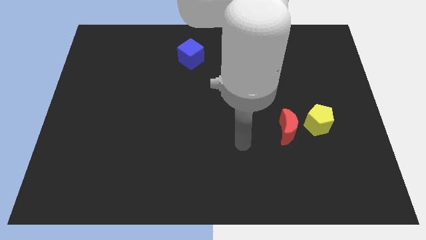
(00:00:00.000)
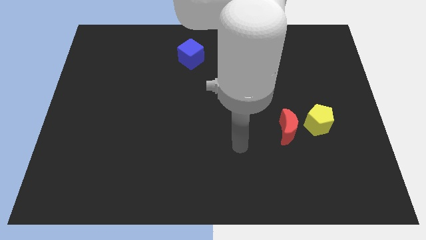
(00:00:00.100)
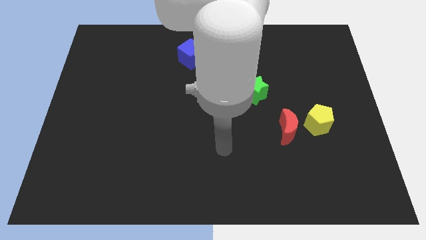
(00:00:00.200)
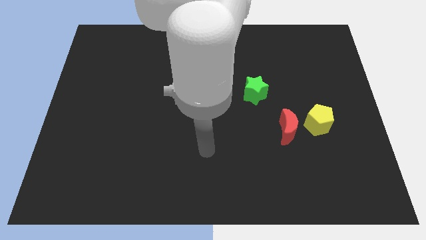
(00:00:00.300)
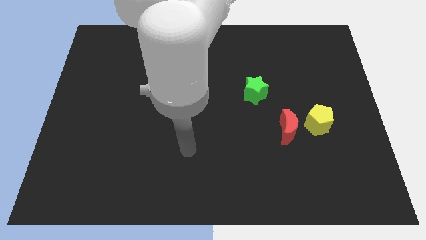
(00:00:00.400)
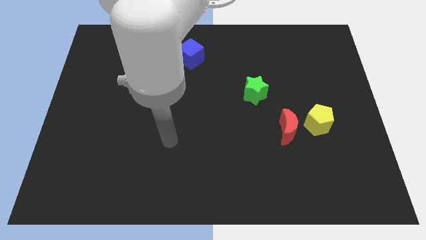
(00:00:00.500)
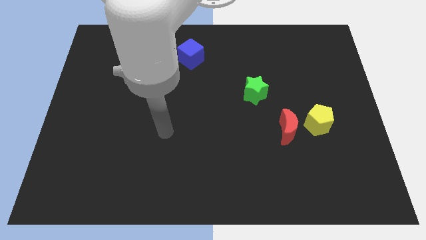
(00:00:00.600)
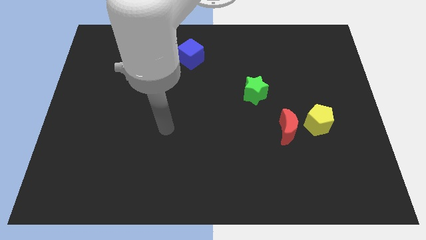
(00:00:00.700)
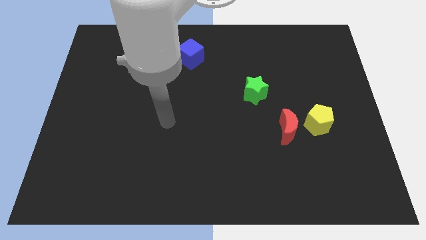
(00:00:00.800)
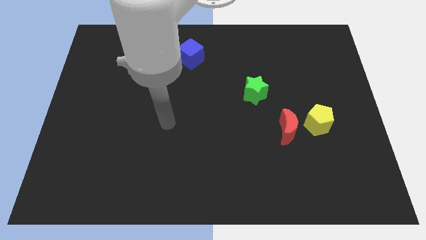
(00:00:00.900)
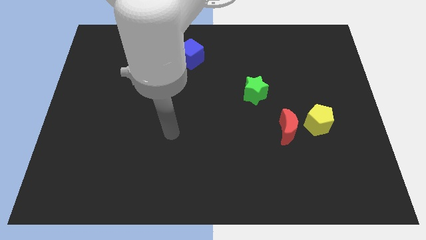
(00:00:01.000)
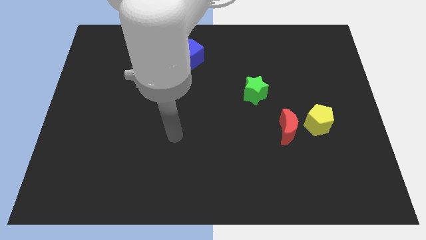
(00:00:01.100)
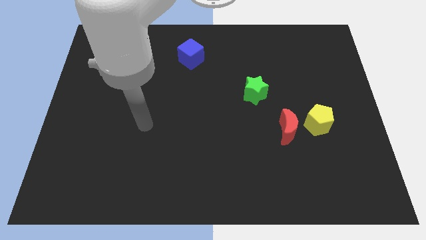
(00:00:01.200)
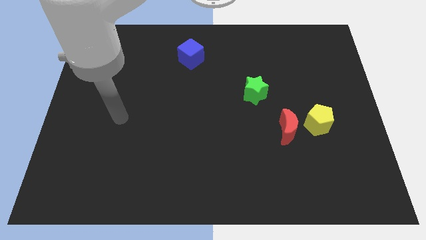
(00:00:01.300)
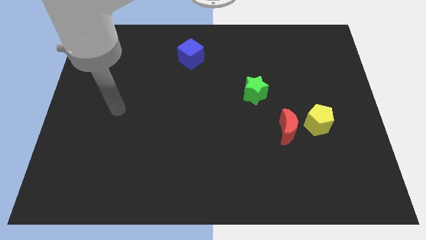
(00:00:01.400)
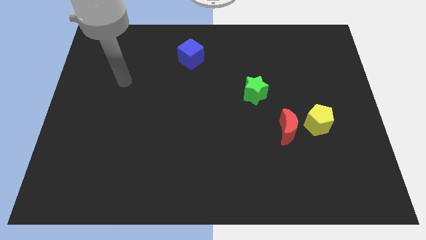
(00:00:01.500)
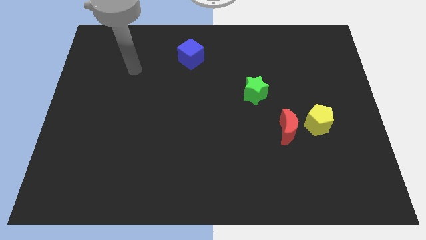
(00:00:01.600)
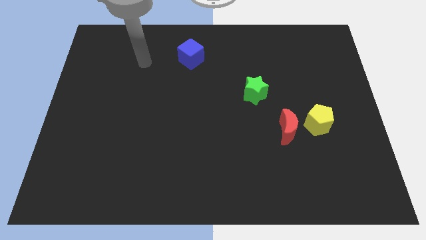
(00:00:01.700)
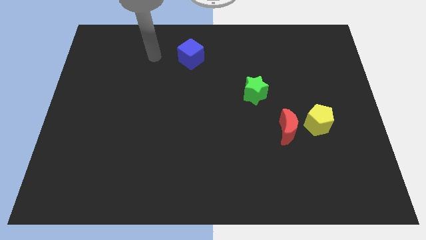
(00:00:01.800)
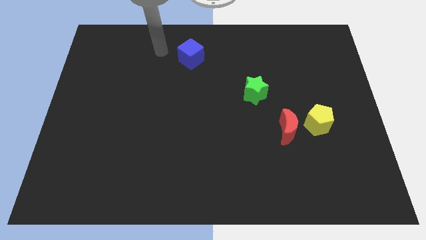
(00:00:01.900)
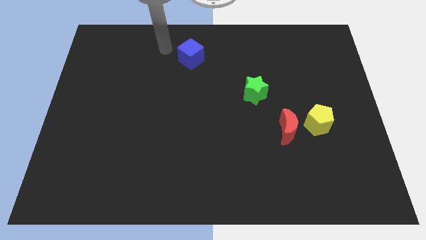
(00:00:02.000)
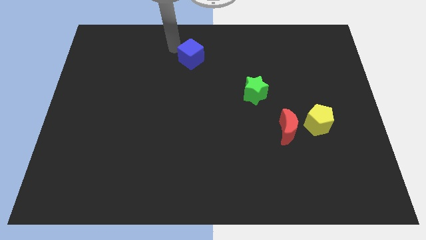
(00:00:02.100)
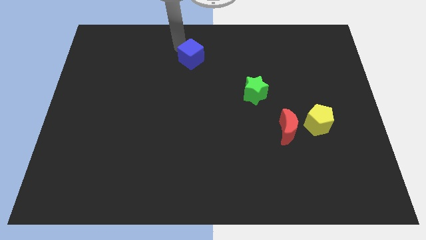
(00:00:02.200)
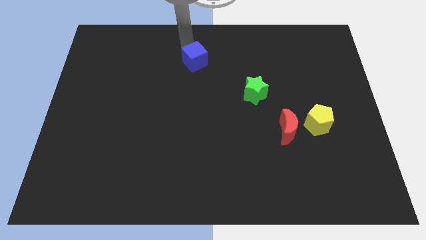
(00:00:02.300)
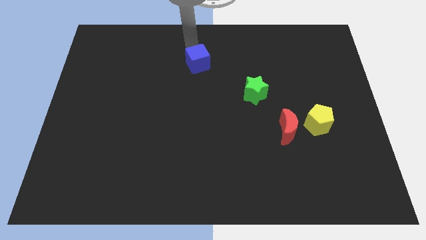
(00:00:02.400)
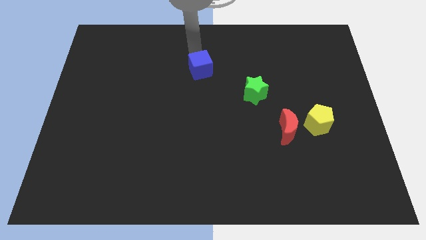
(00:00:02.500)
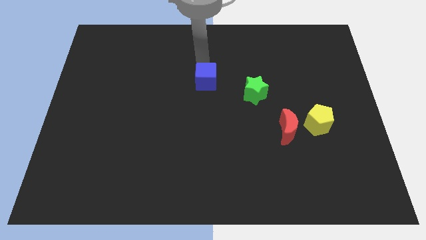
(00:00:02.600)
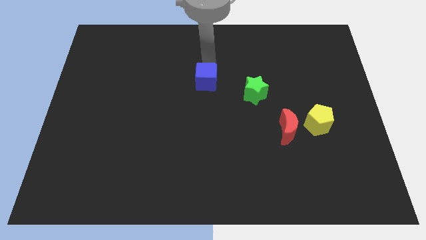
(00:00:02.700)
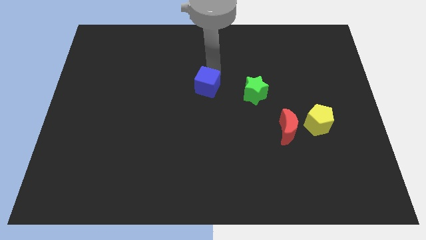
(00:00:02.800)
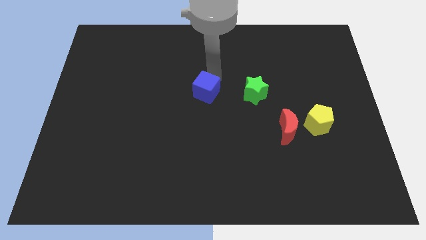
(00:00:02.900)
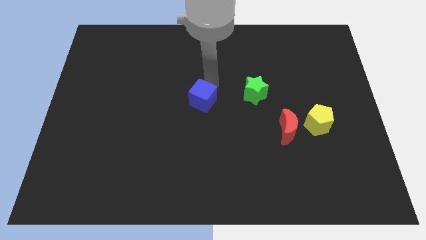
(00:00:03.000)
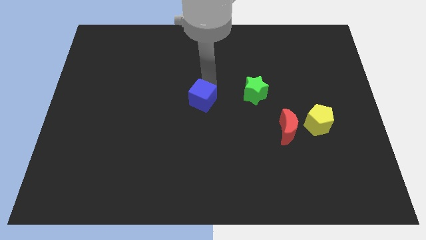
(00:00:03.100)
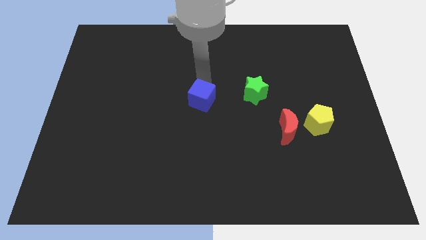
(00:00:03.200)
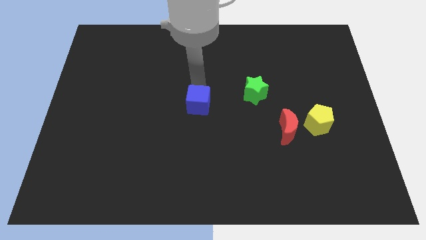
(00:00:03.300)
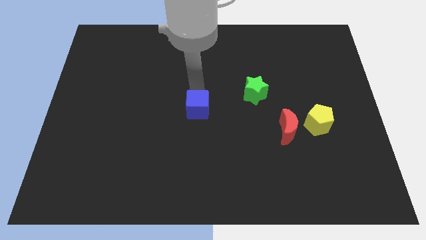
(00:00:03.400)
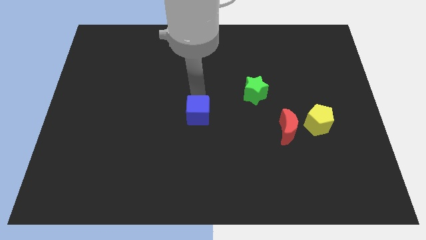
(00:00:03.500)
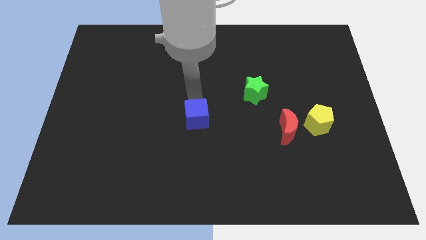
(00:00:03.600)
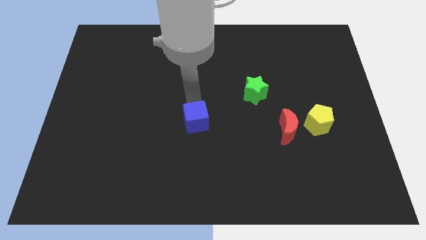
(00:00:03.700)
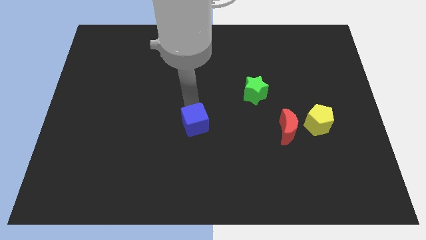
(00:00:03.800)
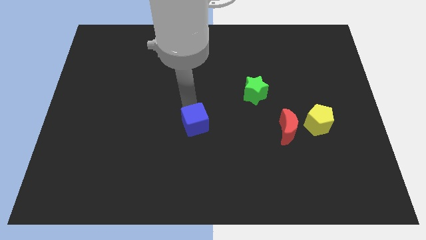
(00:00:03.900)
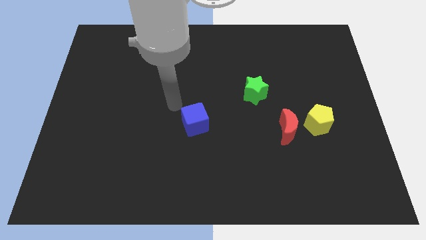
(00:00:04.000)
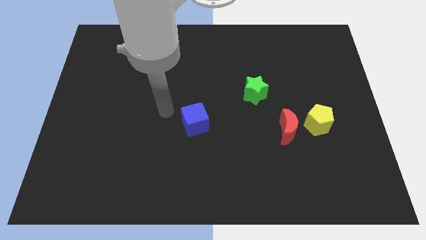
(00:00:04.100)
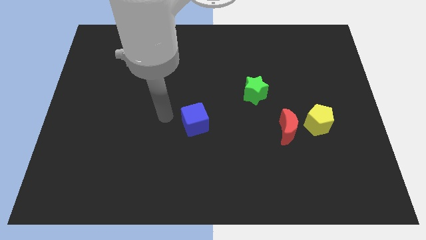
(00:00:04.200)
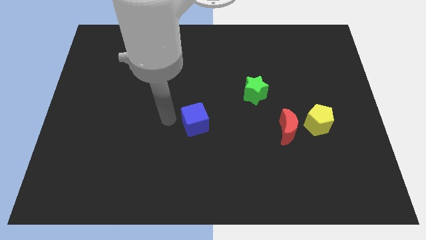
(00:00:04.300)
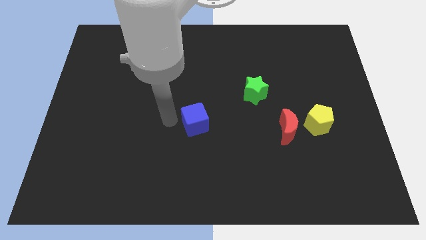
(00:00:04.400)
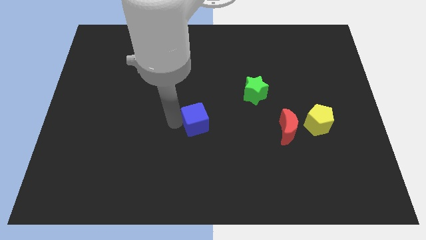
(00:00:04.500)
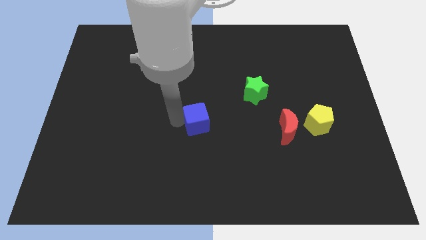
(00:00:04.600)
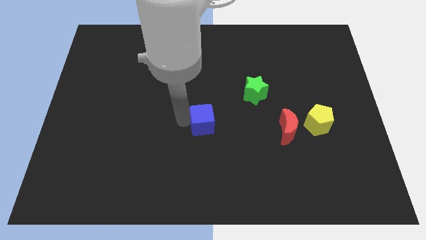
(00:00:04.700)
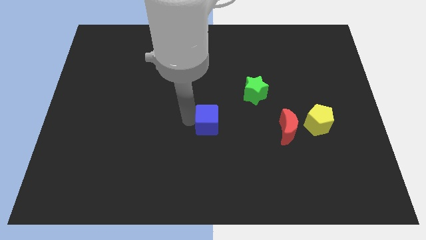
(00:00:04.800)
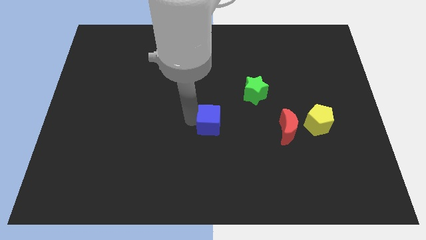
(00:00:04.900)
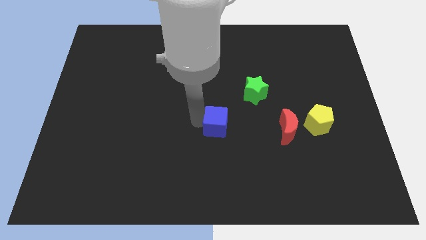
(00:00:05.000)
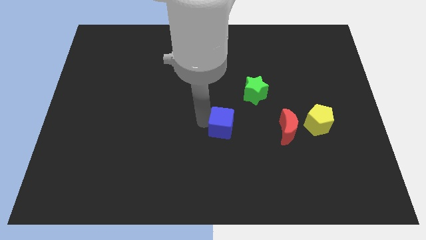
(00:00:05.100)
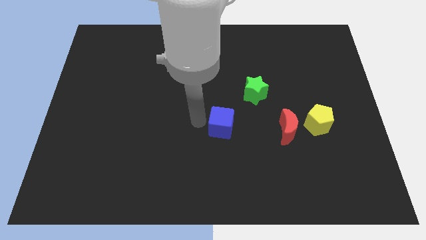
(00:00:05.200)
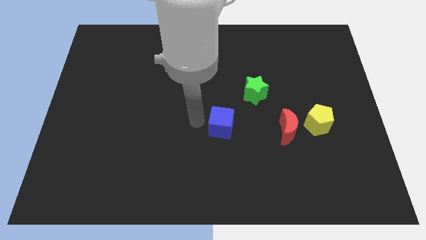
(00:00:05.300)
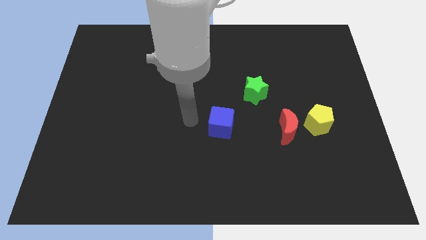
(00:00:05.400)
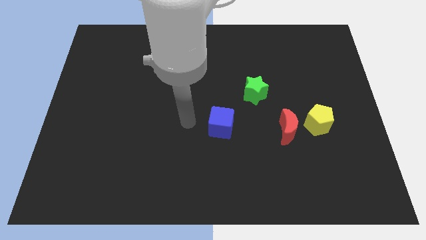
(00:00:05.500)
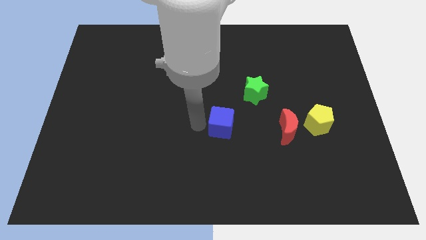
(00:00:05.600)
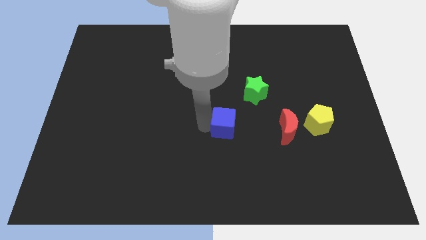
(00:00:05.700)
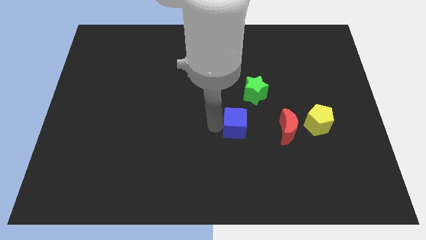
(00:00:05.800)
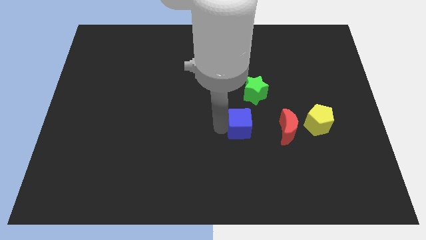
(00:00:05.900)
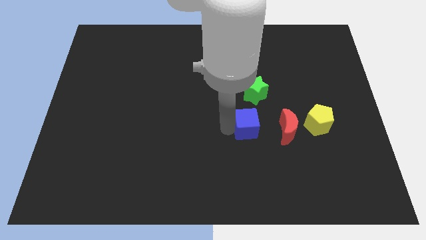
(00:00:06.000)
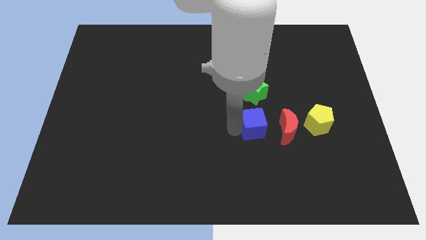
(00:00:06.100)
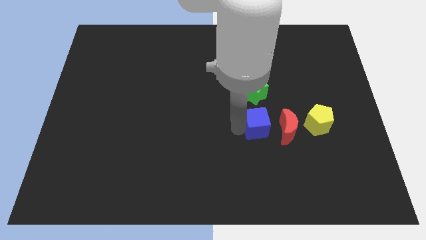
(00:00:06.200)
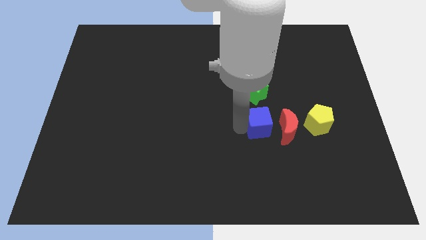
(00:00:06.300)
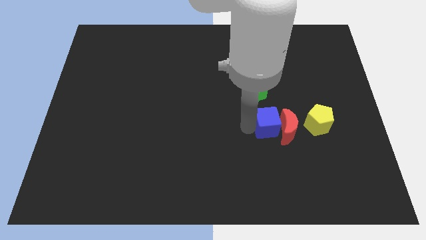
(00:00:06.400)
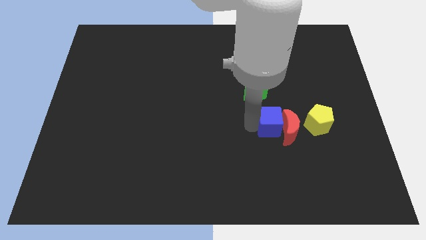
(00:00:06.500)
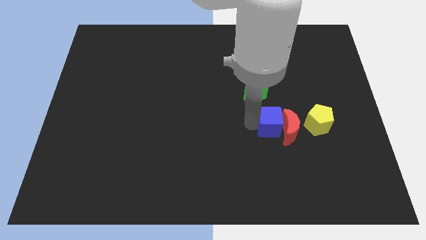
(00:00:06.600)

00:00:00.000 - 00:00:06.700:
move the blue block close to the red block

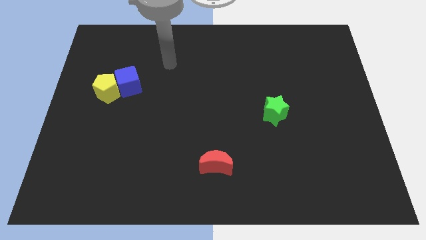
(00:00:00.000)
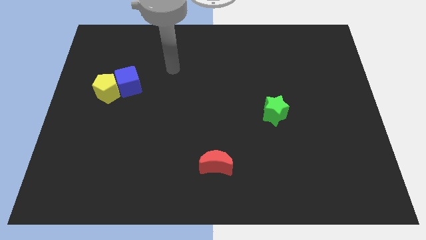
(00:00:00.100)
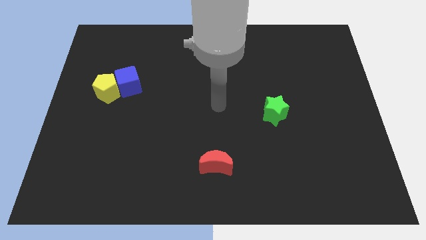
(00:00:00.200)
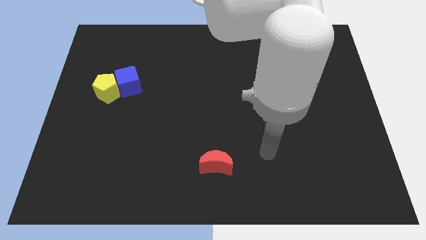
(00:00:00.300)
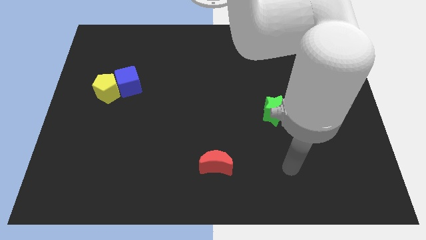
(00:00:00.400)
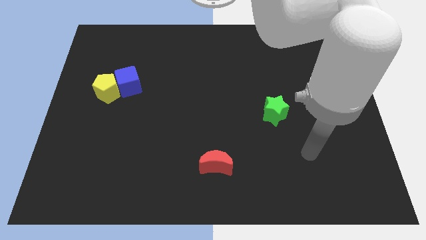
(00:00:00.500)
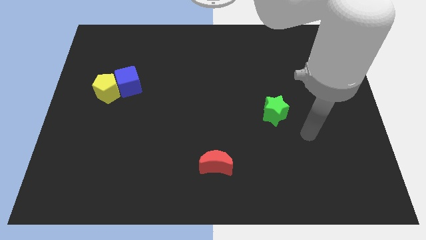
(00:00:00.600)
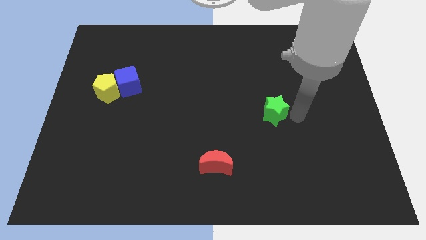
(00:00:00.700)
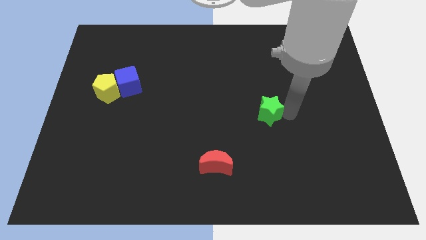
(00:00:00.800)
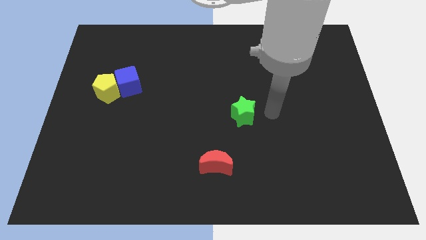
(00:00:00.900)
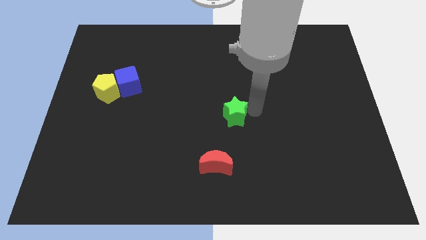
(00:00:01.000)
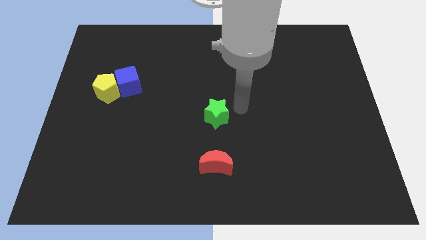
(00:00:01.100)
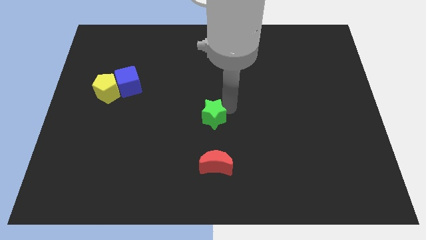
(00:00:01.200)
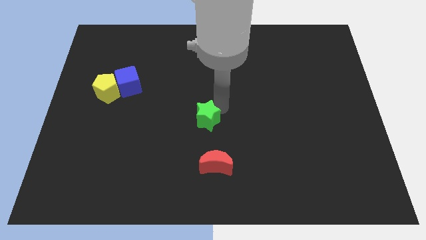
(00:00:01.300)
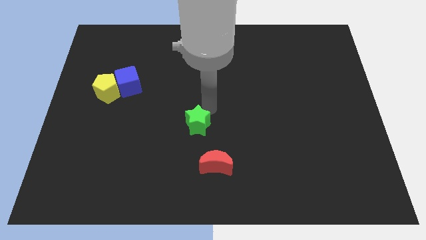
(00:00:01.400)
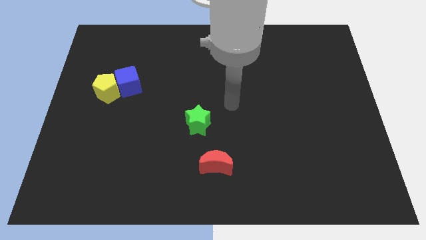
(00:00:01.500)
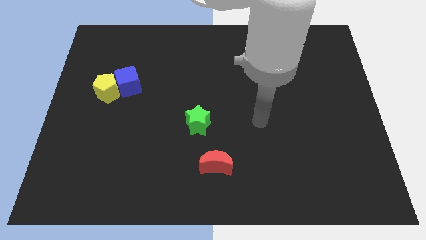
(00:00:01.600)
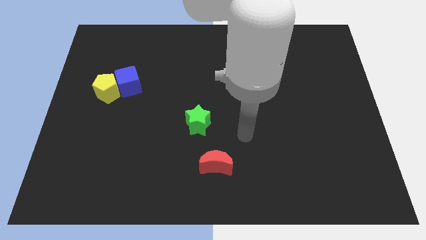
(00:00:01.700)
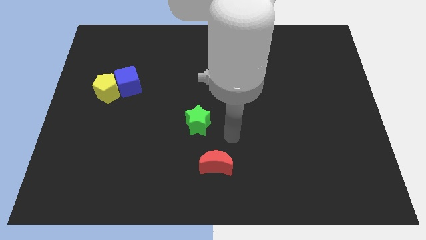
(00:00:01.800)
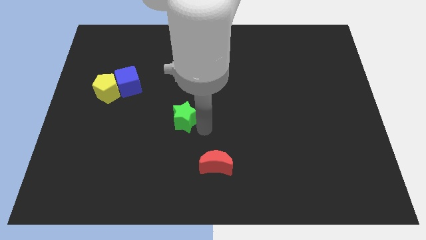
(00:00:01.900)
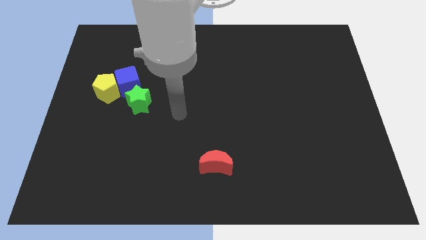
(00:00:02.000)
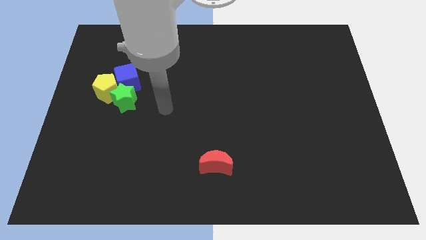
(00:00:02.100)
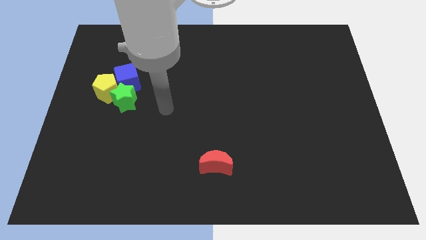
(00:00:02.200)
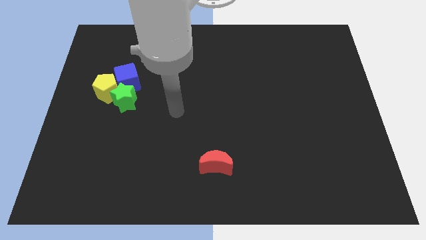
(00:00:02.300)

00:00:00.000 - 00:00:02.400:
slide the green star close to the blue block
